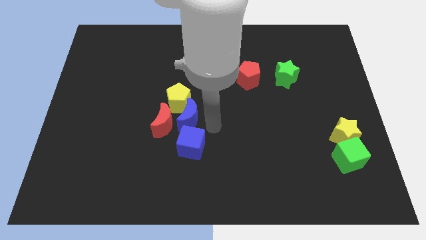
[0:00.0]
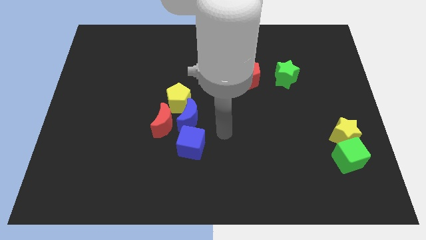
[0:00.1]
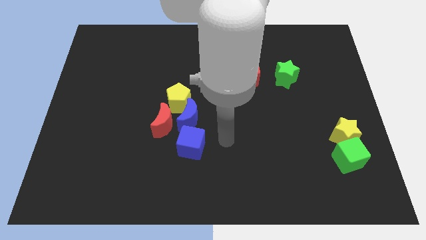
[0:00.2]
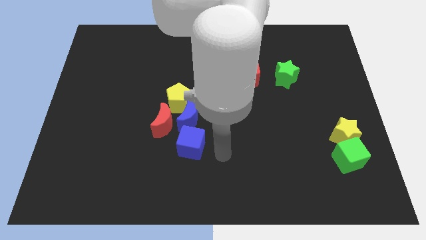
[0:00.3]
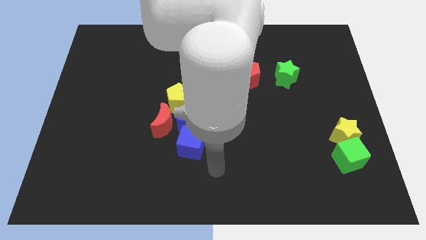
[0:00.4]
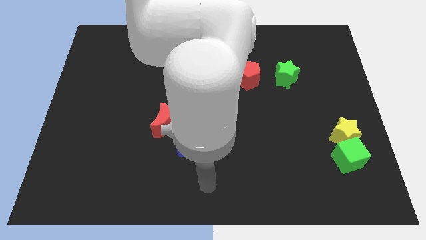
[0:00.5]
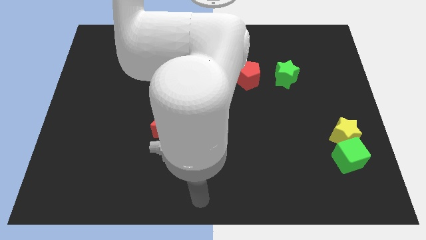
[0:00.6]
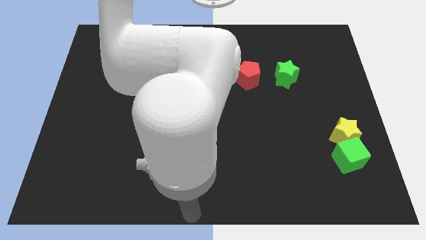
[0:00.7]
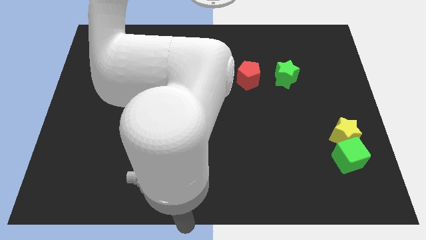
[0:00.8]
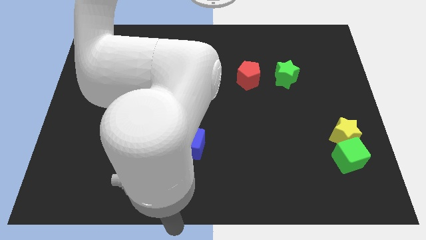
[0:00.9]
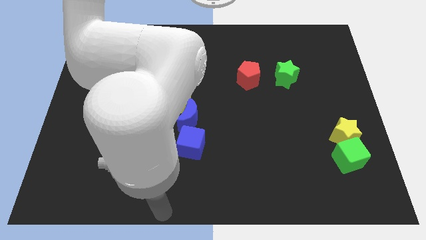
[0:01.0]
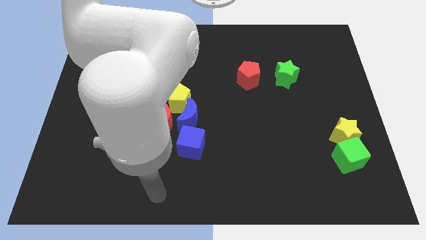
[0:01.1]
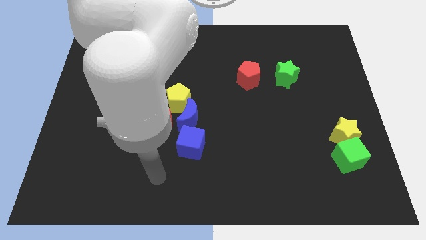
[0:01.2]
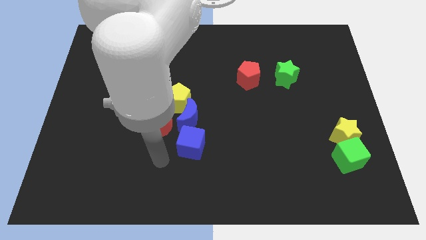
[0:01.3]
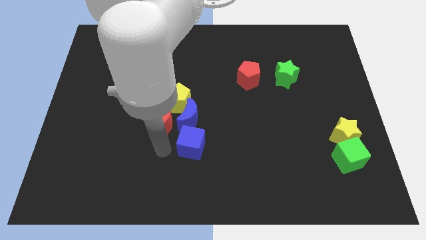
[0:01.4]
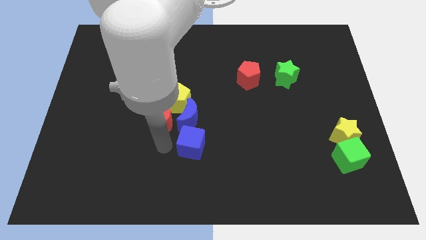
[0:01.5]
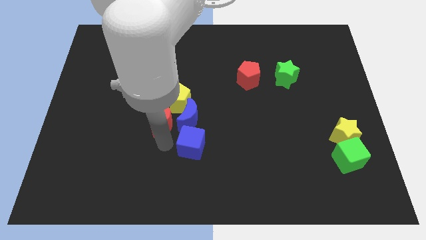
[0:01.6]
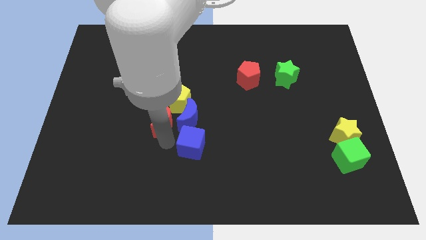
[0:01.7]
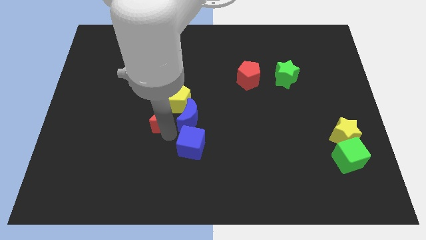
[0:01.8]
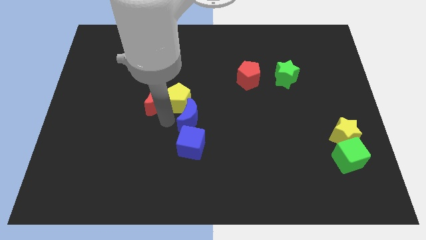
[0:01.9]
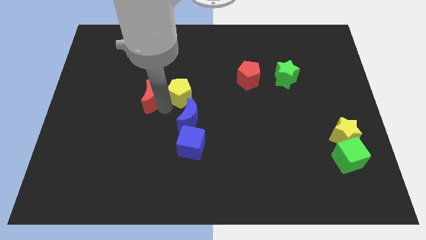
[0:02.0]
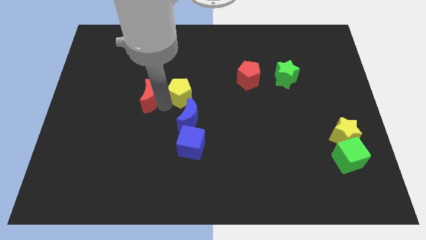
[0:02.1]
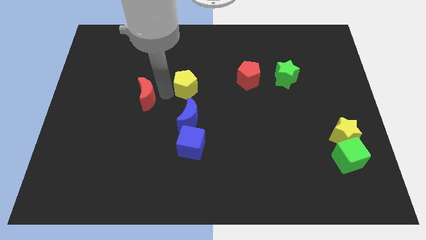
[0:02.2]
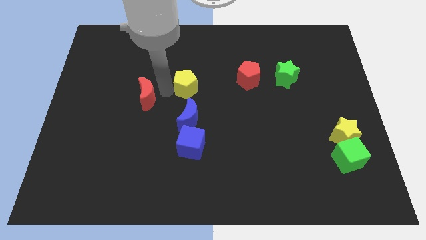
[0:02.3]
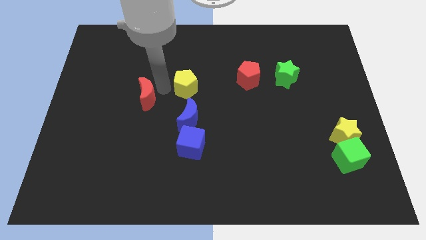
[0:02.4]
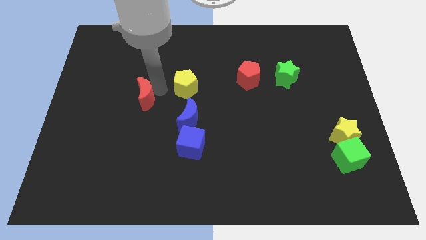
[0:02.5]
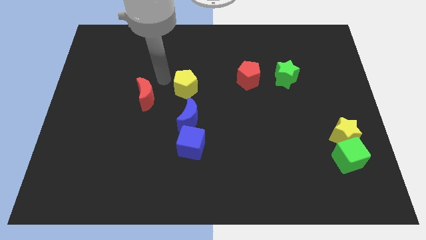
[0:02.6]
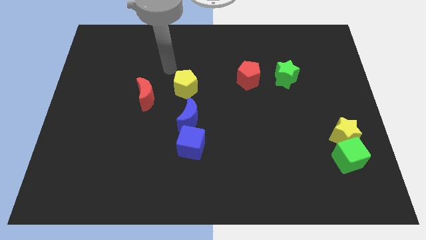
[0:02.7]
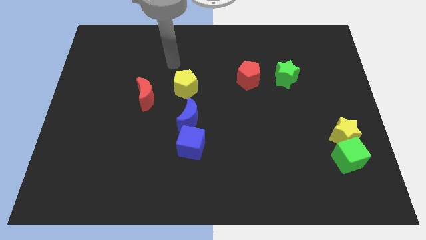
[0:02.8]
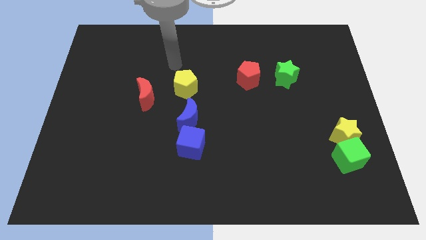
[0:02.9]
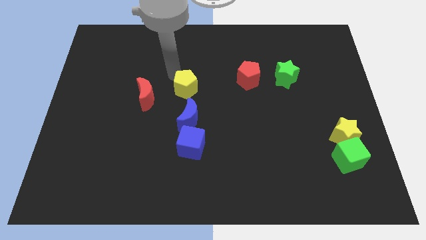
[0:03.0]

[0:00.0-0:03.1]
separate yellow pentagon and red moon from each other

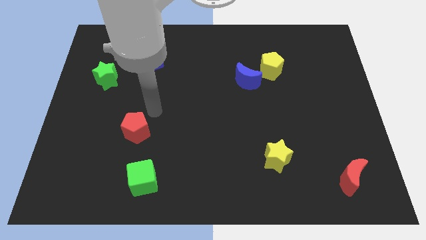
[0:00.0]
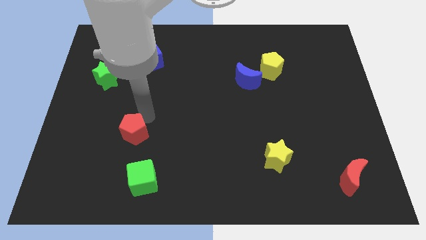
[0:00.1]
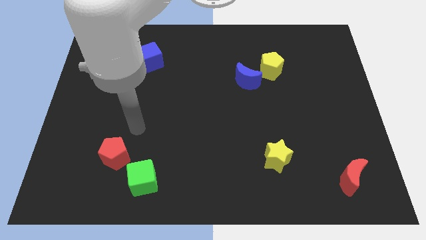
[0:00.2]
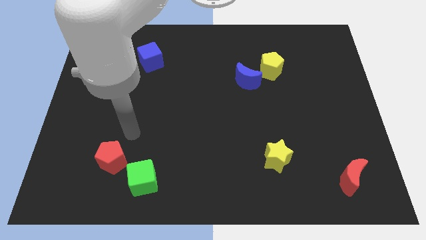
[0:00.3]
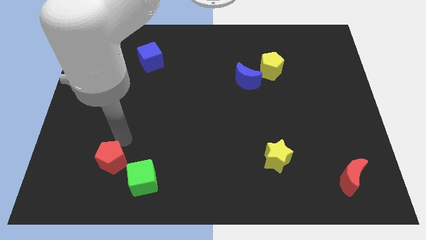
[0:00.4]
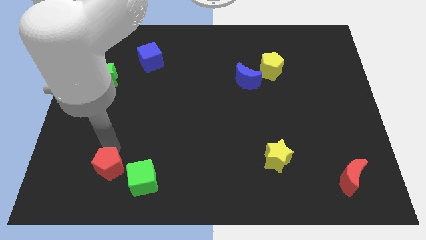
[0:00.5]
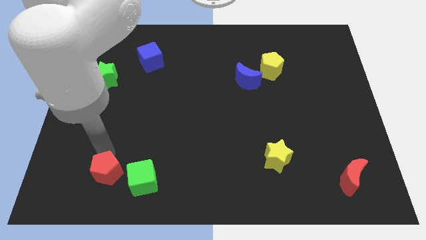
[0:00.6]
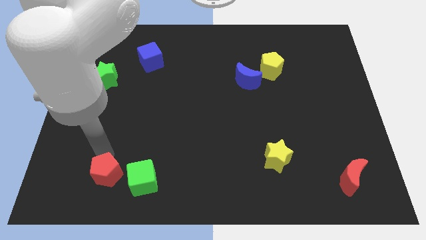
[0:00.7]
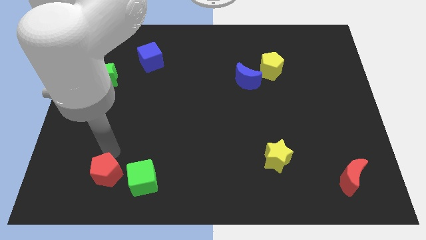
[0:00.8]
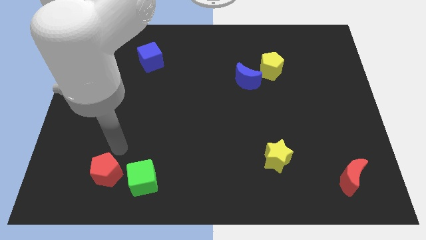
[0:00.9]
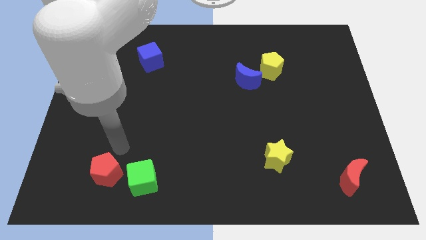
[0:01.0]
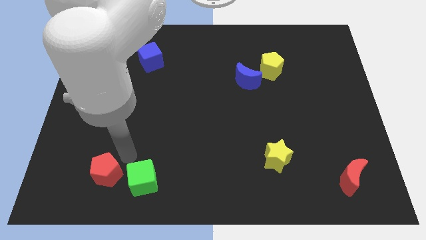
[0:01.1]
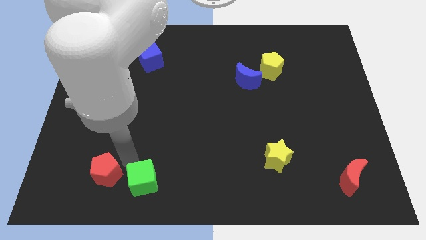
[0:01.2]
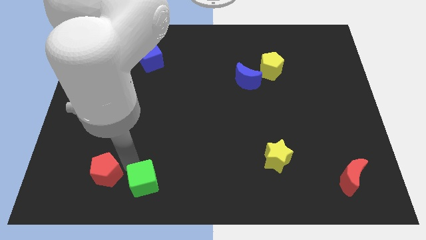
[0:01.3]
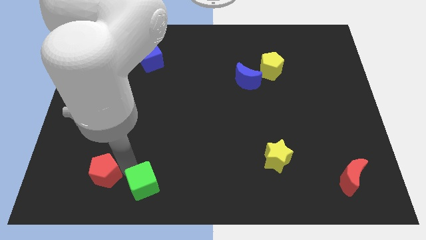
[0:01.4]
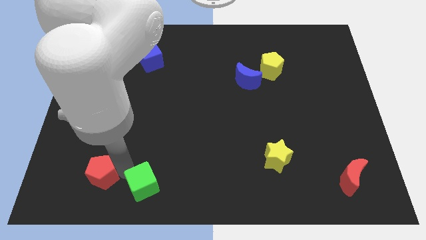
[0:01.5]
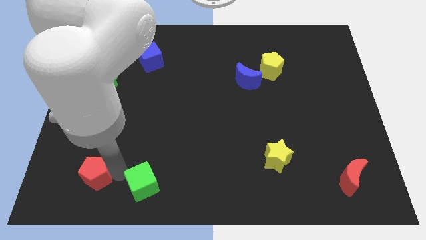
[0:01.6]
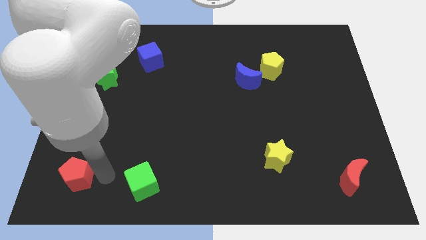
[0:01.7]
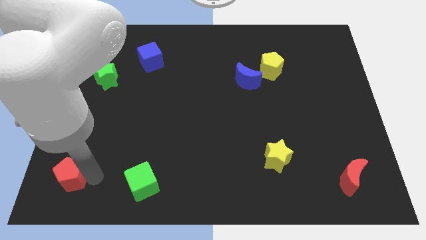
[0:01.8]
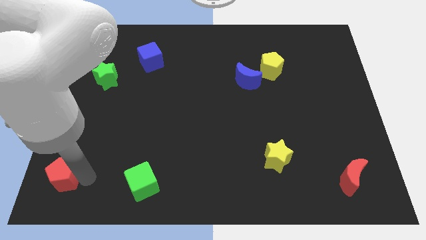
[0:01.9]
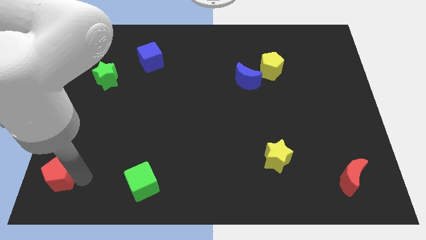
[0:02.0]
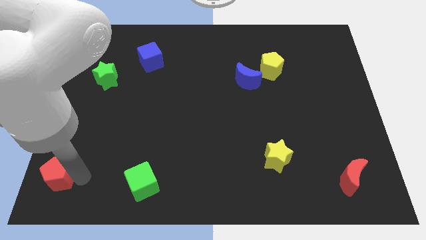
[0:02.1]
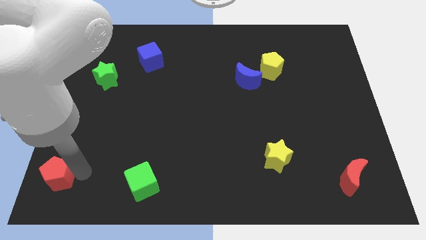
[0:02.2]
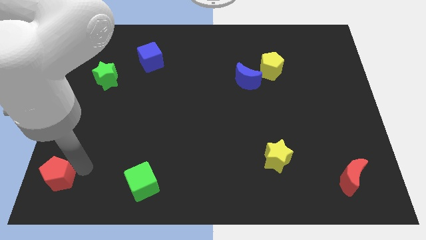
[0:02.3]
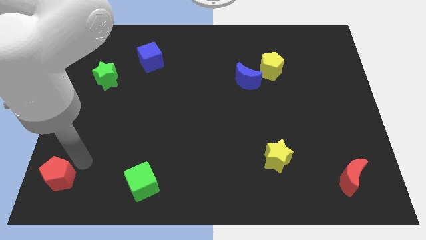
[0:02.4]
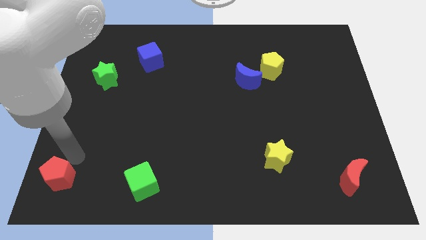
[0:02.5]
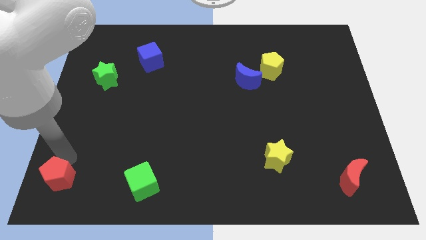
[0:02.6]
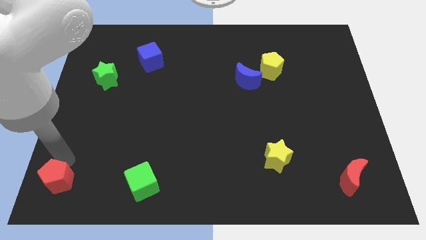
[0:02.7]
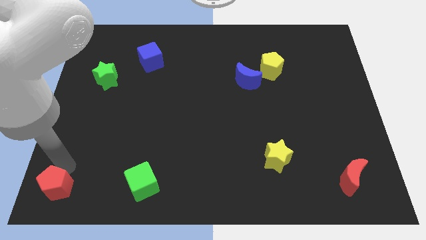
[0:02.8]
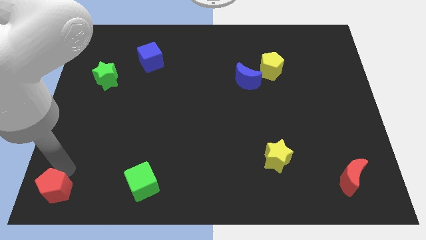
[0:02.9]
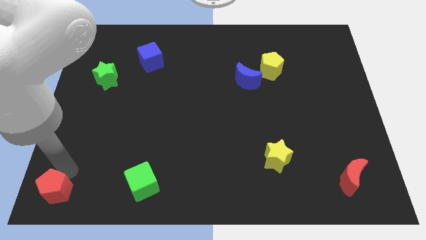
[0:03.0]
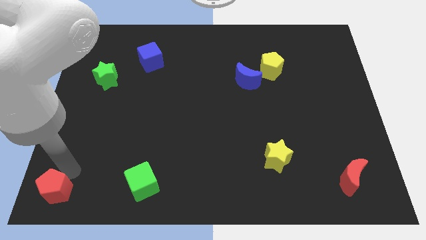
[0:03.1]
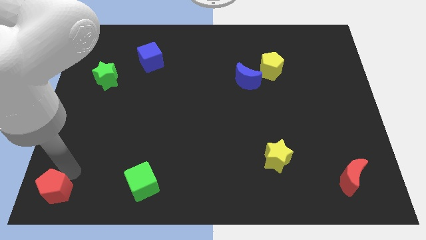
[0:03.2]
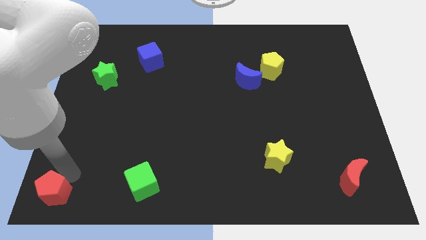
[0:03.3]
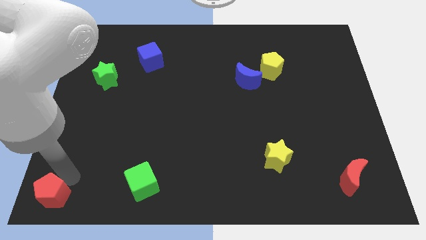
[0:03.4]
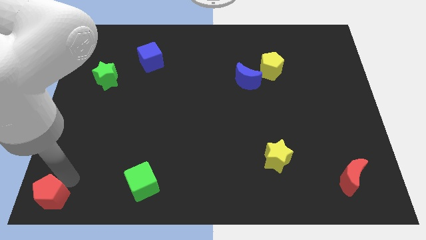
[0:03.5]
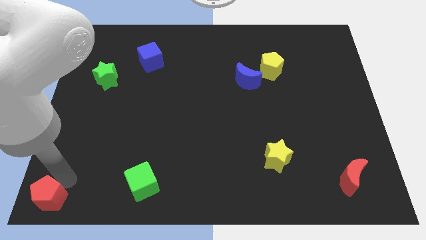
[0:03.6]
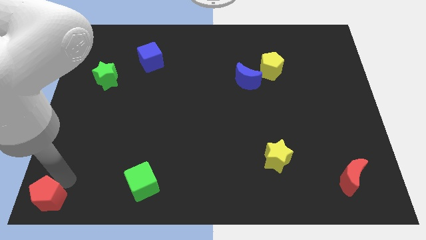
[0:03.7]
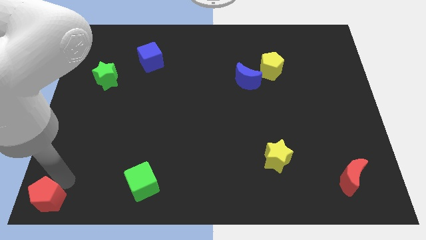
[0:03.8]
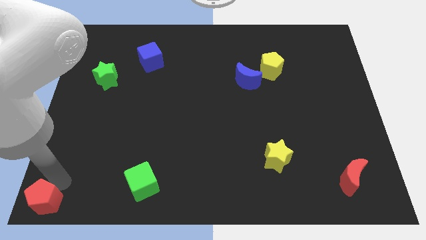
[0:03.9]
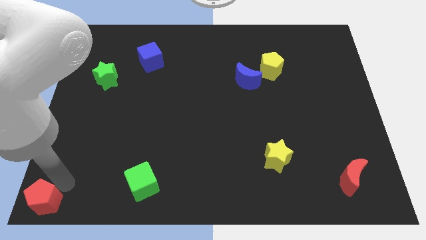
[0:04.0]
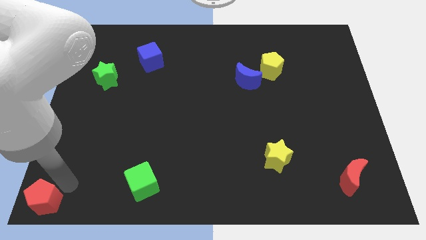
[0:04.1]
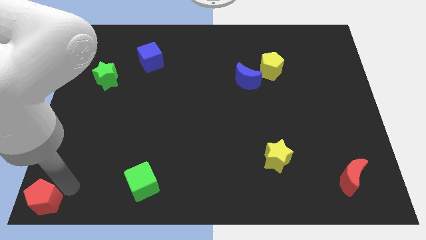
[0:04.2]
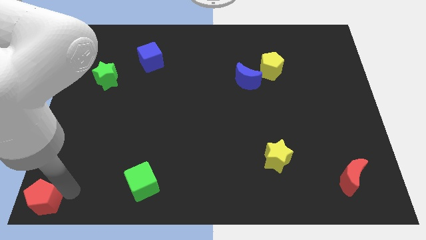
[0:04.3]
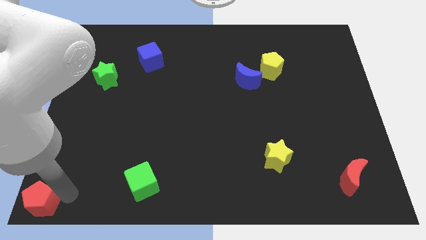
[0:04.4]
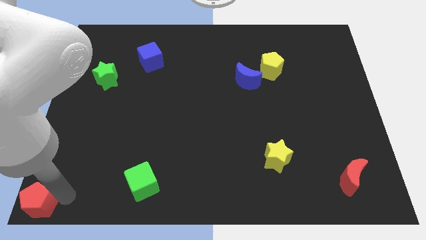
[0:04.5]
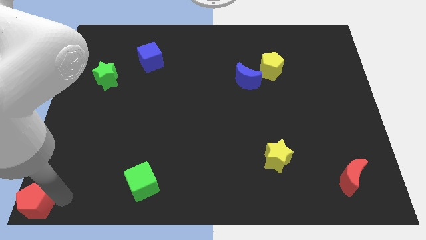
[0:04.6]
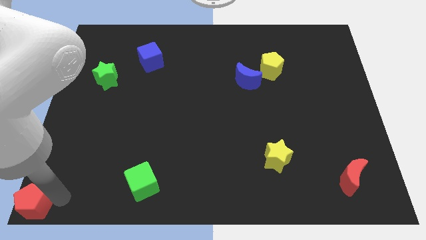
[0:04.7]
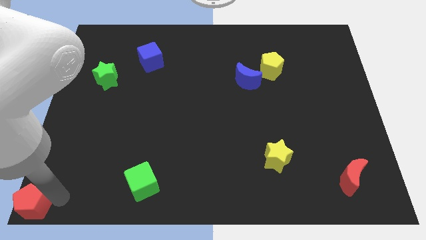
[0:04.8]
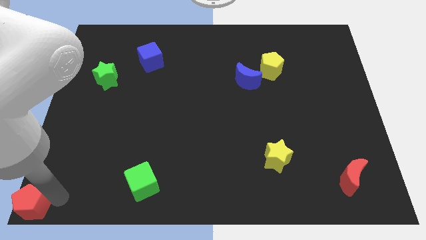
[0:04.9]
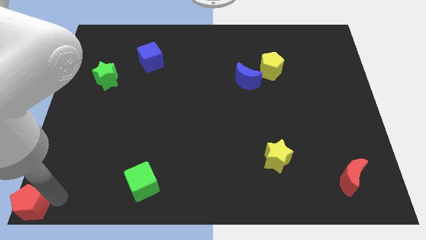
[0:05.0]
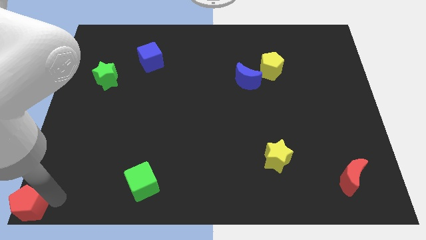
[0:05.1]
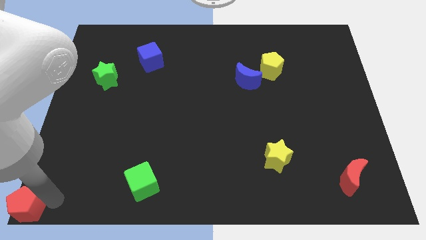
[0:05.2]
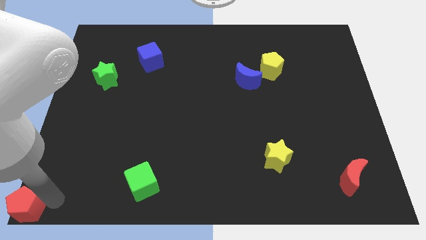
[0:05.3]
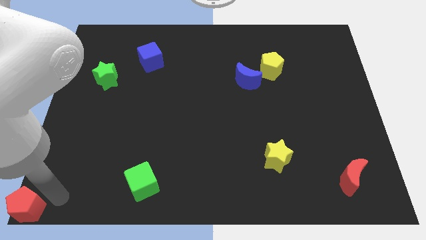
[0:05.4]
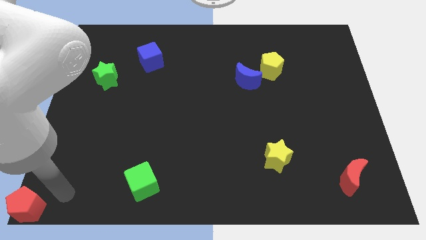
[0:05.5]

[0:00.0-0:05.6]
place the red pentagon at the bottom left corner of the board

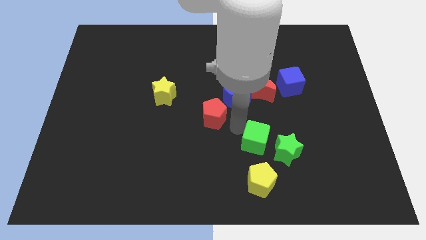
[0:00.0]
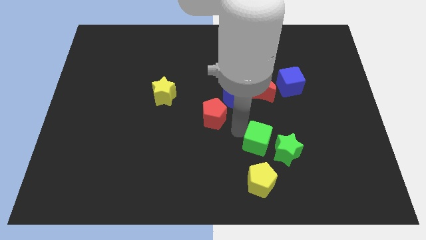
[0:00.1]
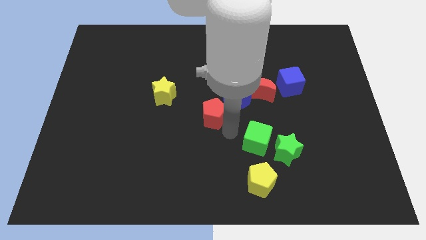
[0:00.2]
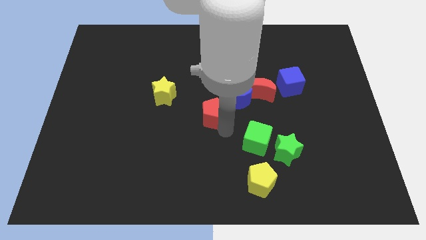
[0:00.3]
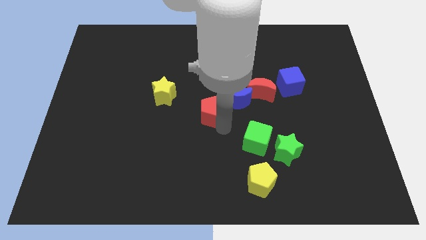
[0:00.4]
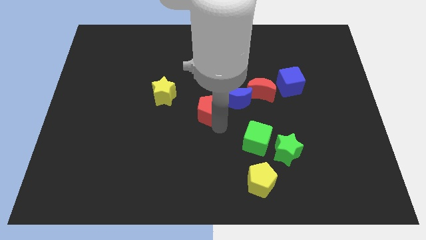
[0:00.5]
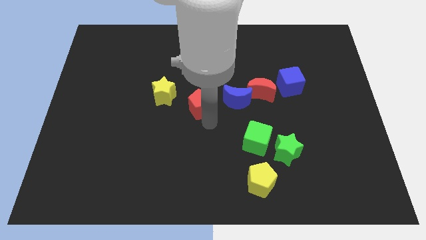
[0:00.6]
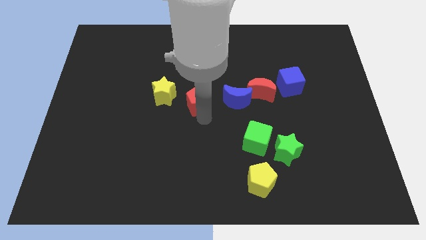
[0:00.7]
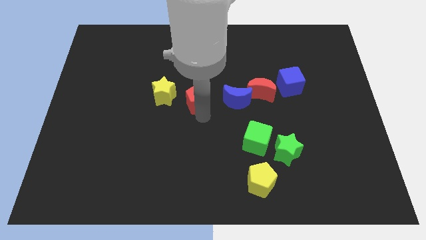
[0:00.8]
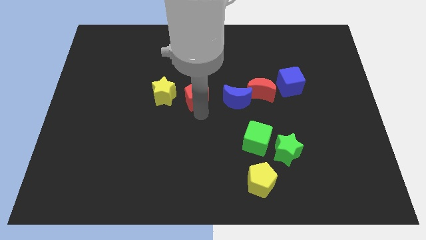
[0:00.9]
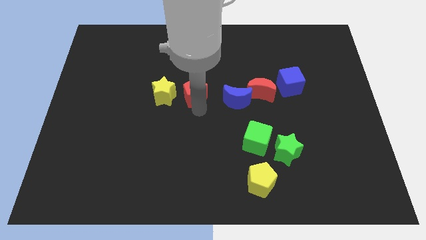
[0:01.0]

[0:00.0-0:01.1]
put the red pentagon at the right side of the yellow star
